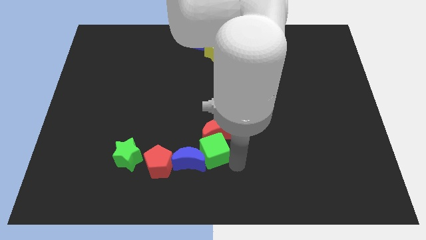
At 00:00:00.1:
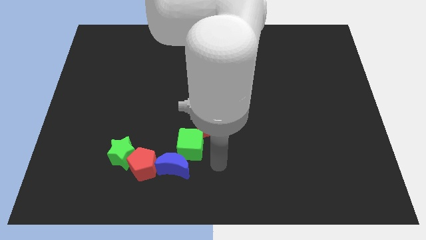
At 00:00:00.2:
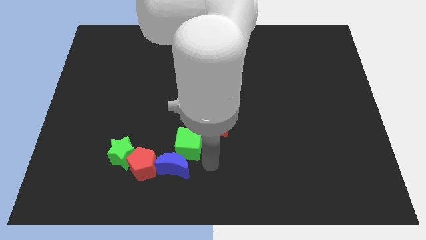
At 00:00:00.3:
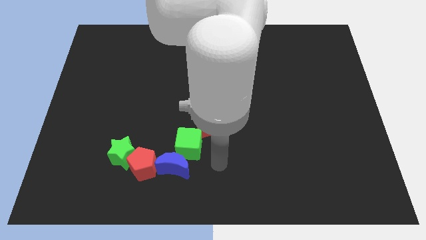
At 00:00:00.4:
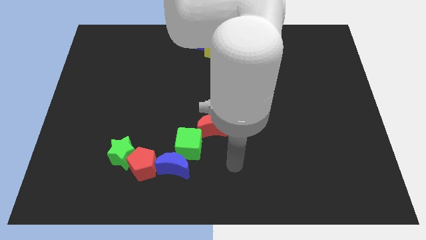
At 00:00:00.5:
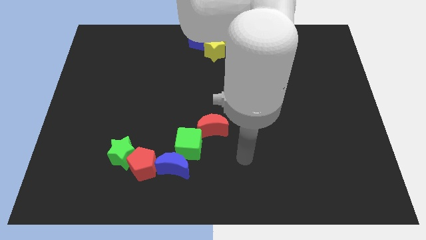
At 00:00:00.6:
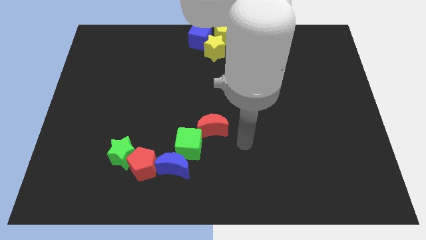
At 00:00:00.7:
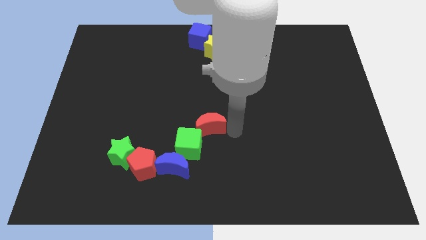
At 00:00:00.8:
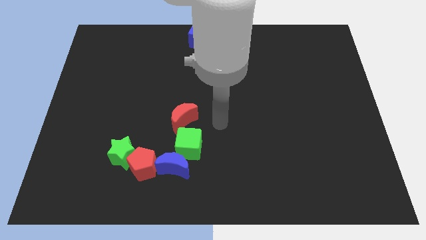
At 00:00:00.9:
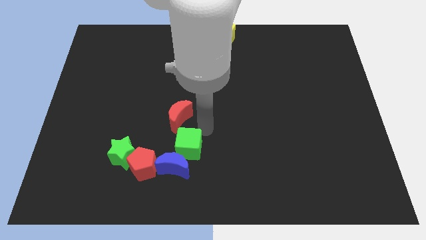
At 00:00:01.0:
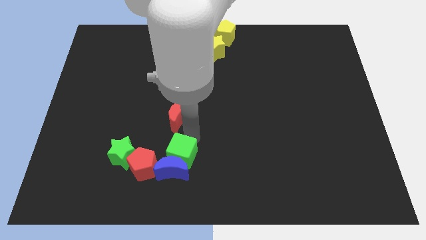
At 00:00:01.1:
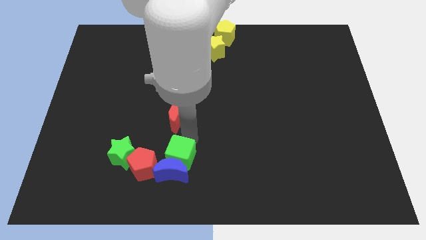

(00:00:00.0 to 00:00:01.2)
place green cube and red moon above the blue crescent

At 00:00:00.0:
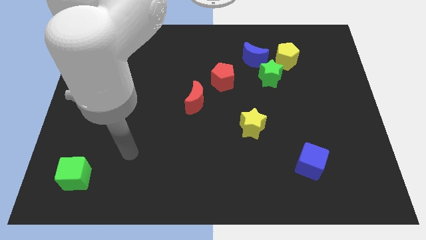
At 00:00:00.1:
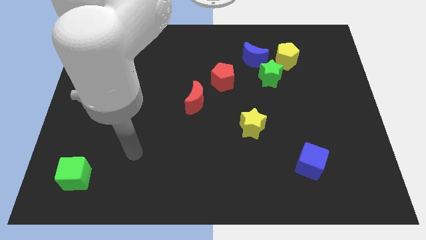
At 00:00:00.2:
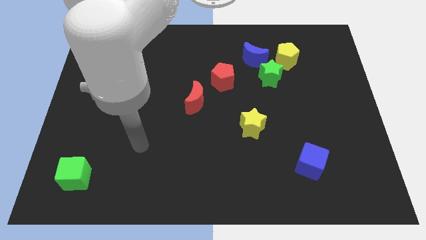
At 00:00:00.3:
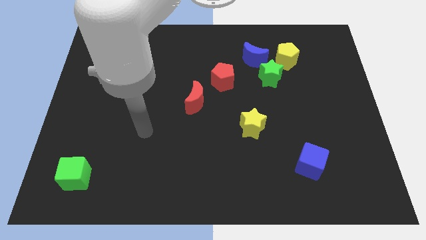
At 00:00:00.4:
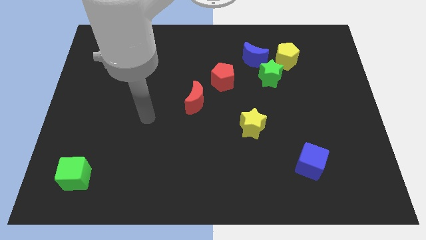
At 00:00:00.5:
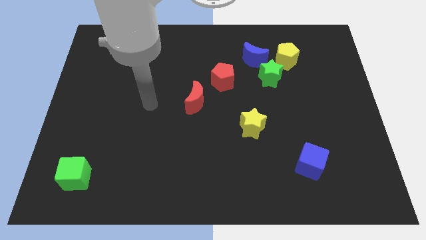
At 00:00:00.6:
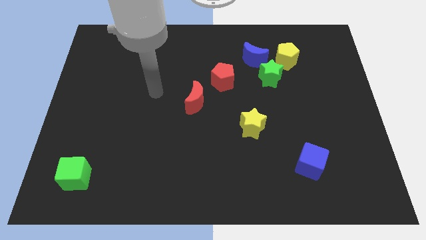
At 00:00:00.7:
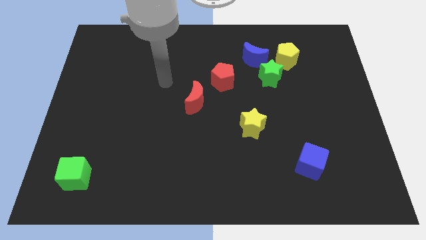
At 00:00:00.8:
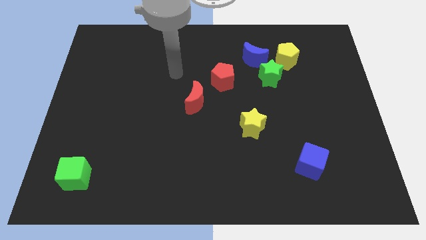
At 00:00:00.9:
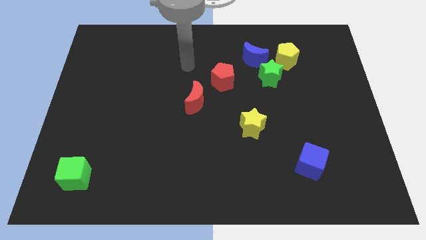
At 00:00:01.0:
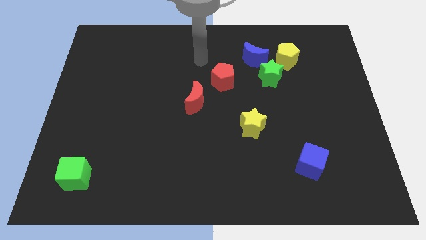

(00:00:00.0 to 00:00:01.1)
place your arm top of the red moon

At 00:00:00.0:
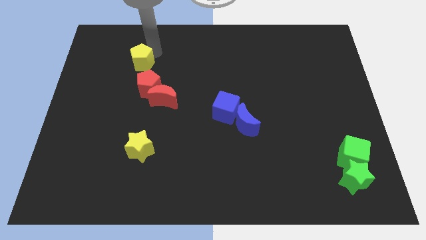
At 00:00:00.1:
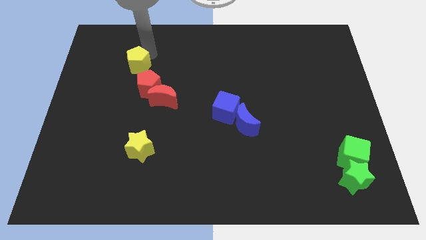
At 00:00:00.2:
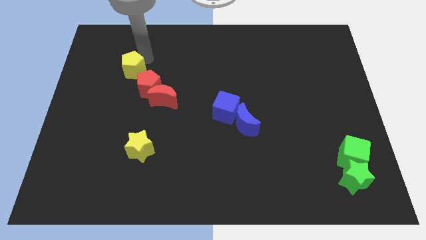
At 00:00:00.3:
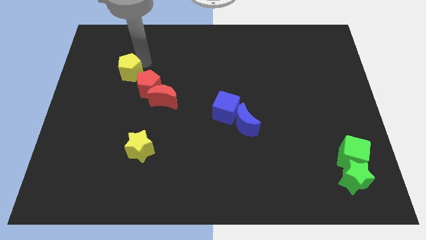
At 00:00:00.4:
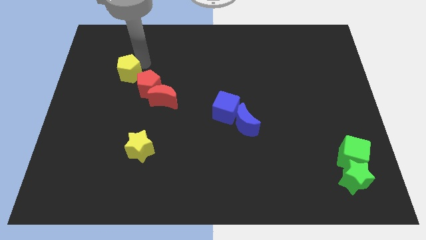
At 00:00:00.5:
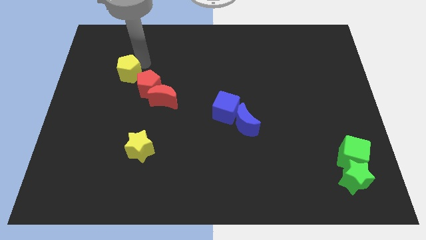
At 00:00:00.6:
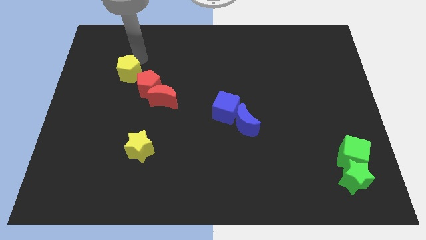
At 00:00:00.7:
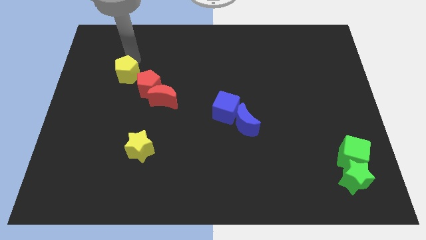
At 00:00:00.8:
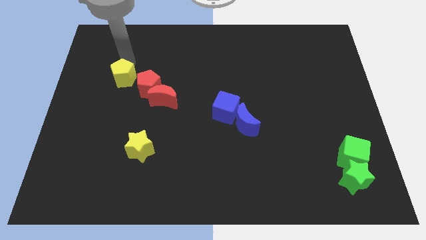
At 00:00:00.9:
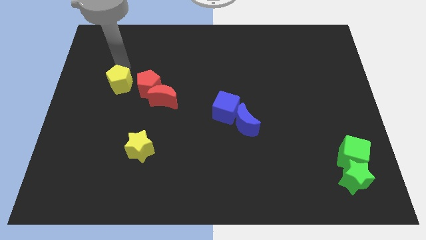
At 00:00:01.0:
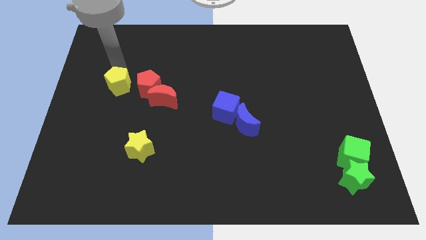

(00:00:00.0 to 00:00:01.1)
move the yellow pentagon to the left of the red pentagon

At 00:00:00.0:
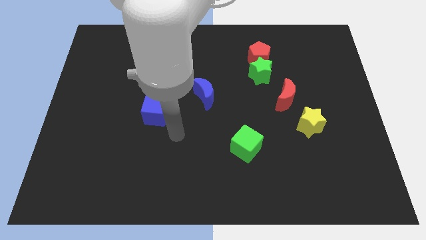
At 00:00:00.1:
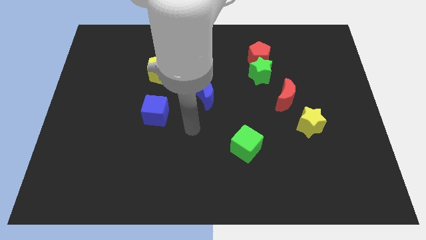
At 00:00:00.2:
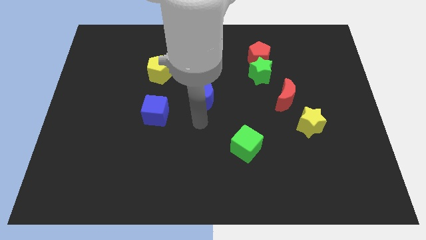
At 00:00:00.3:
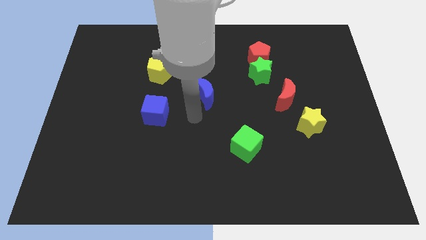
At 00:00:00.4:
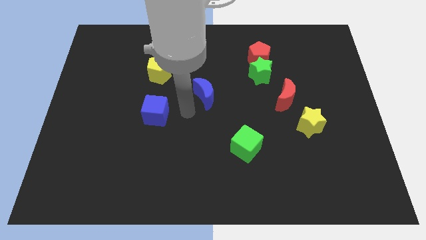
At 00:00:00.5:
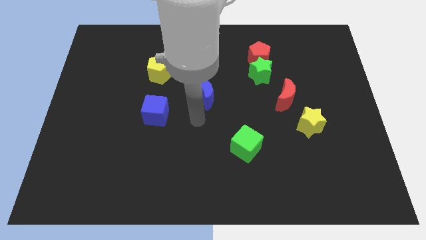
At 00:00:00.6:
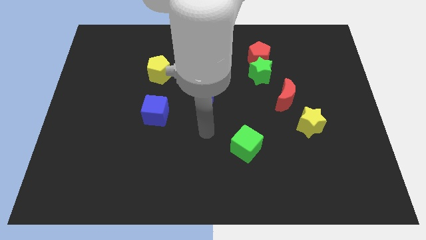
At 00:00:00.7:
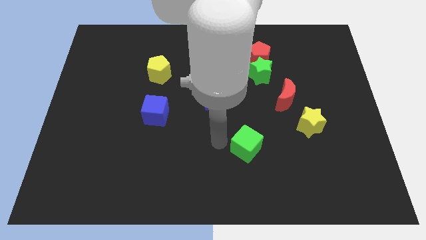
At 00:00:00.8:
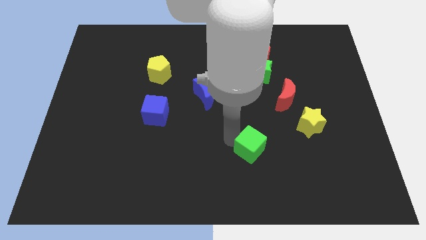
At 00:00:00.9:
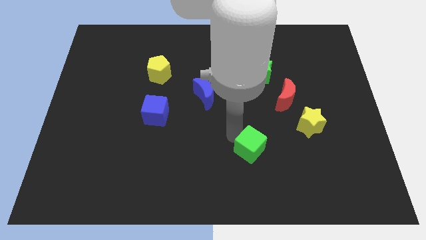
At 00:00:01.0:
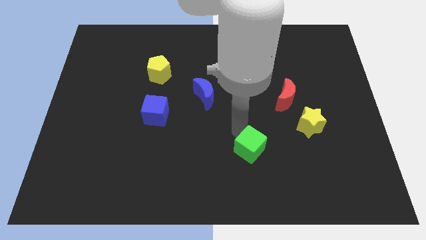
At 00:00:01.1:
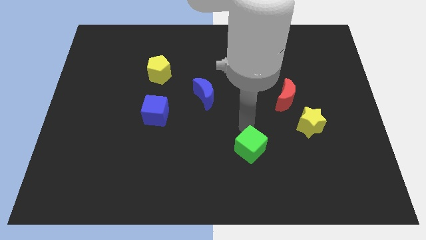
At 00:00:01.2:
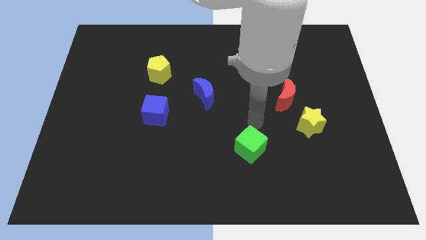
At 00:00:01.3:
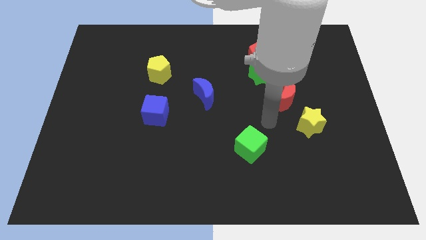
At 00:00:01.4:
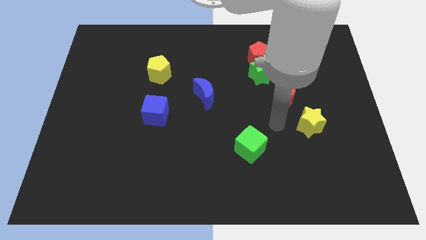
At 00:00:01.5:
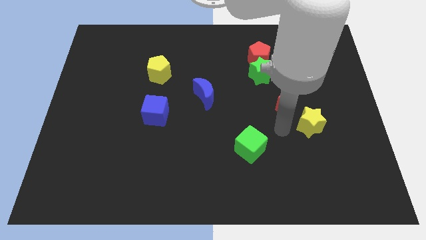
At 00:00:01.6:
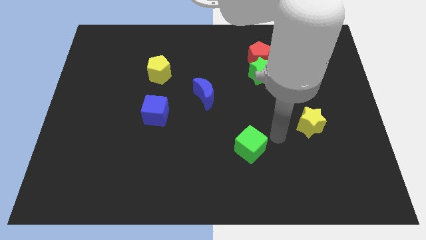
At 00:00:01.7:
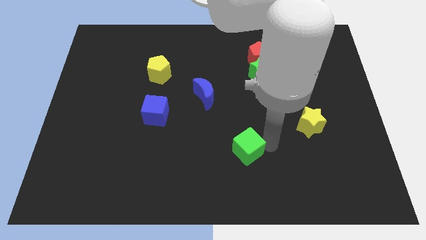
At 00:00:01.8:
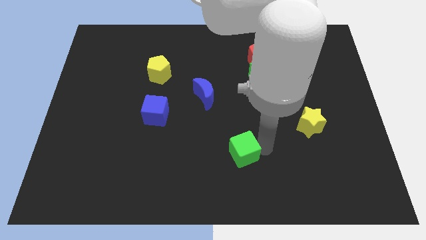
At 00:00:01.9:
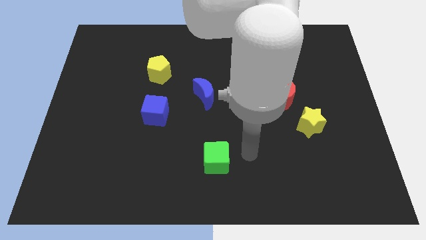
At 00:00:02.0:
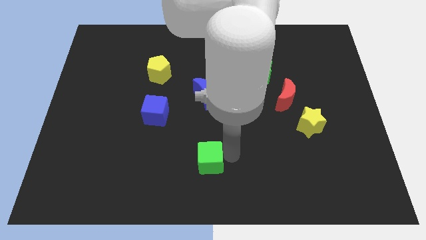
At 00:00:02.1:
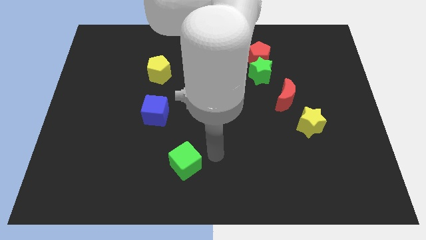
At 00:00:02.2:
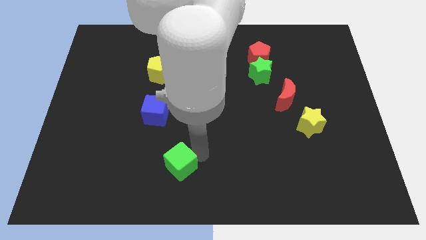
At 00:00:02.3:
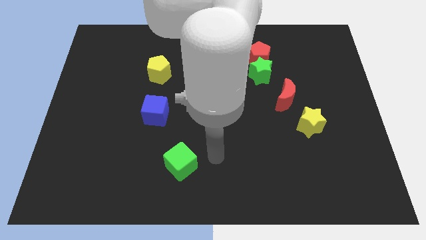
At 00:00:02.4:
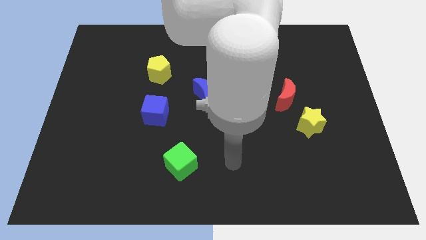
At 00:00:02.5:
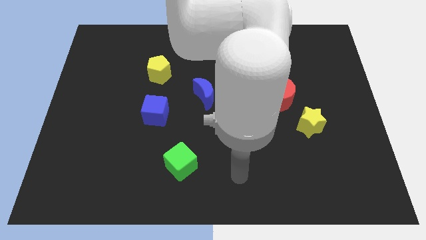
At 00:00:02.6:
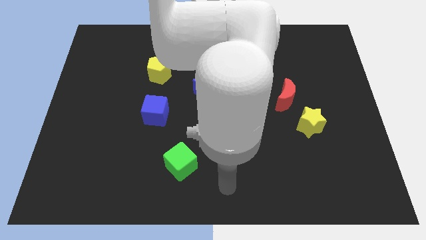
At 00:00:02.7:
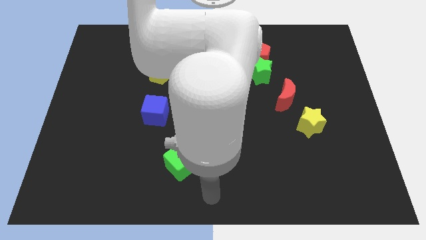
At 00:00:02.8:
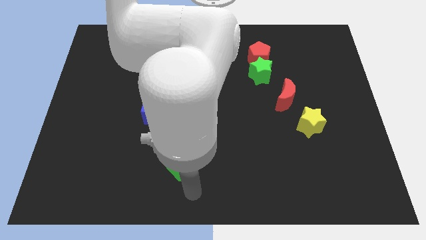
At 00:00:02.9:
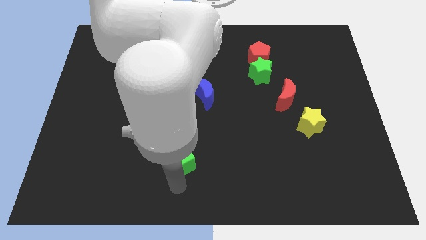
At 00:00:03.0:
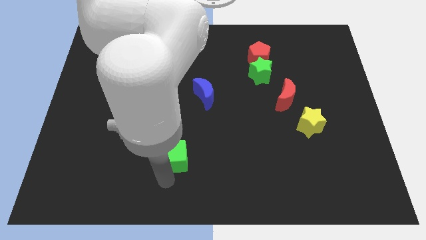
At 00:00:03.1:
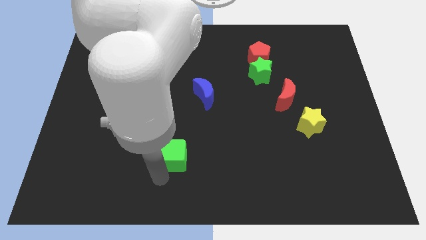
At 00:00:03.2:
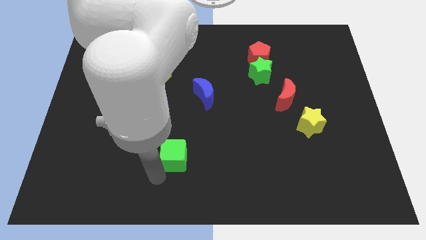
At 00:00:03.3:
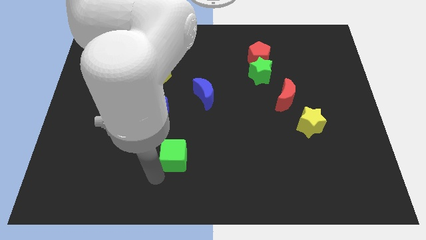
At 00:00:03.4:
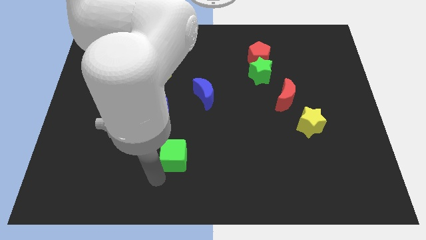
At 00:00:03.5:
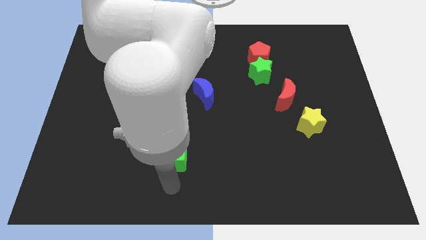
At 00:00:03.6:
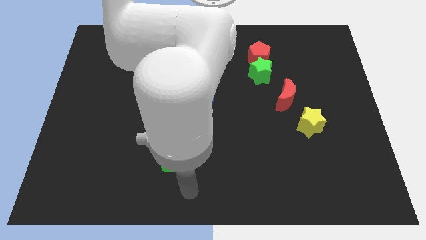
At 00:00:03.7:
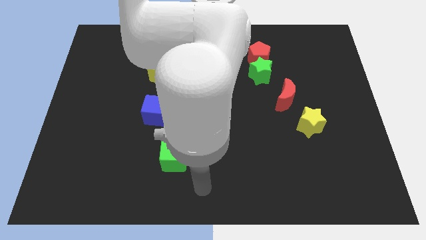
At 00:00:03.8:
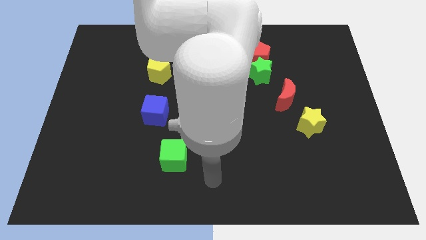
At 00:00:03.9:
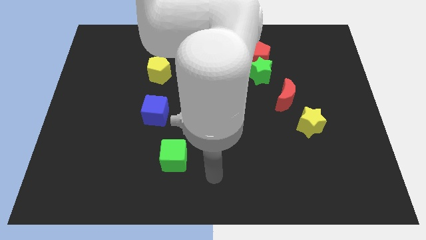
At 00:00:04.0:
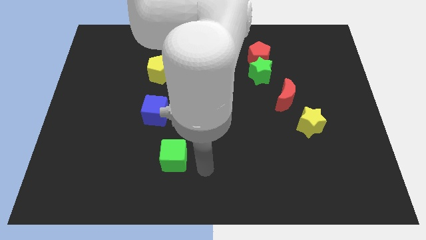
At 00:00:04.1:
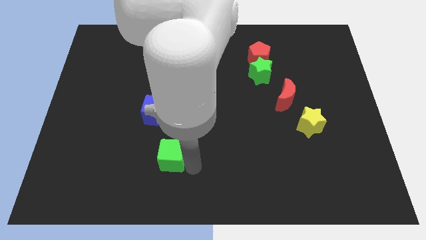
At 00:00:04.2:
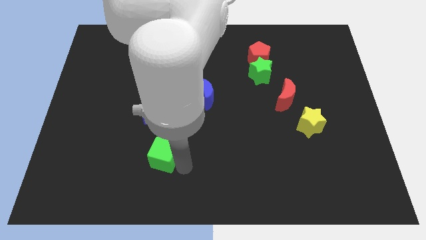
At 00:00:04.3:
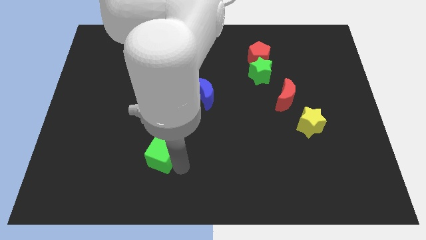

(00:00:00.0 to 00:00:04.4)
slightly move the green cube to the bottom of the blue cube

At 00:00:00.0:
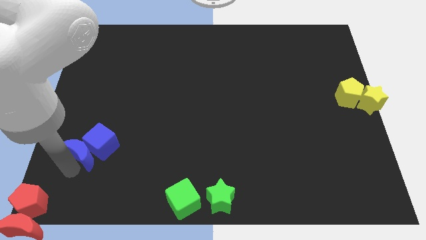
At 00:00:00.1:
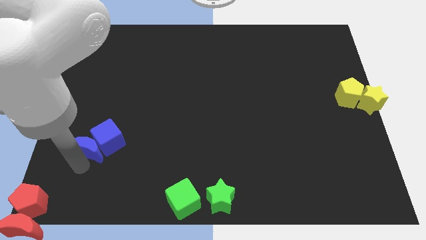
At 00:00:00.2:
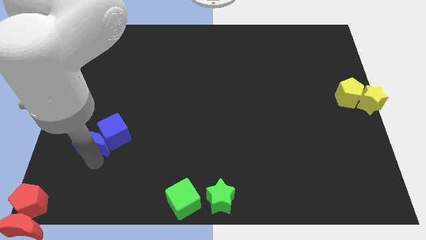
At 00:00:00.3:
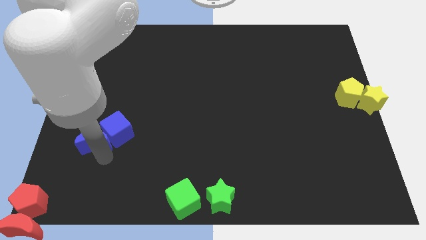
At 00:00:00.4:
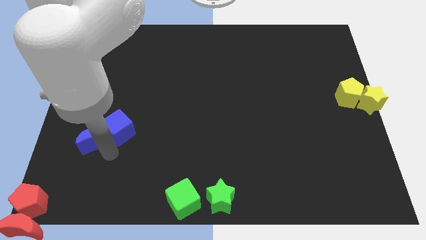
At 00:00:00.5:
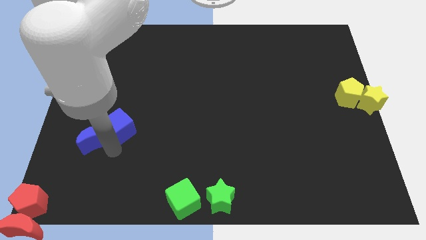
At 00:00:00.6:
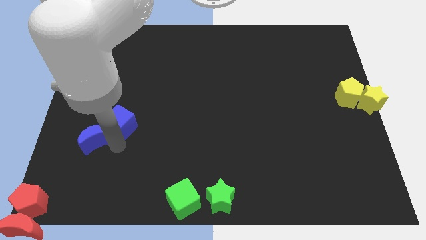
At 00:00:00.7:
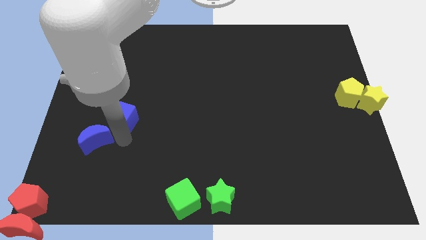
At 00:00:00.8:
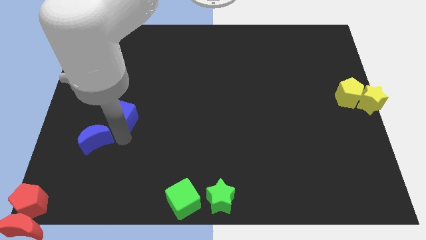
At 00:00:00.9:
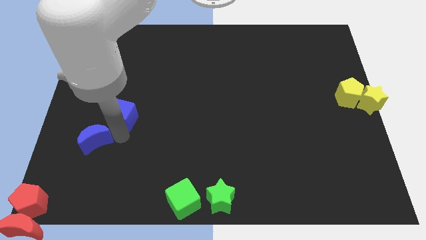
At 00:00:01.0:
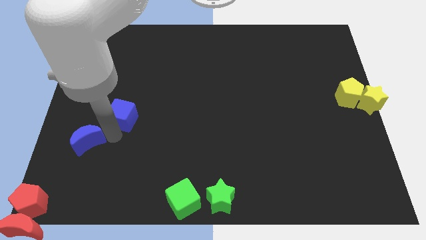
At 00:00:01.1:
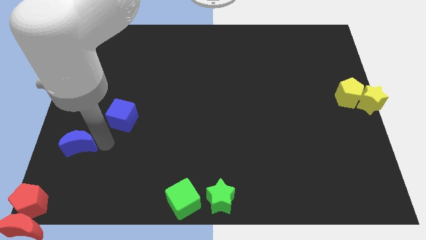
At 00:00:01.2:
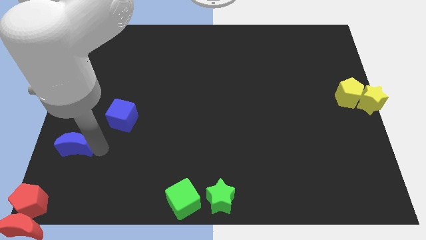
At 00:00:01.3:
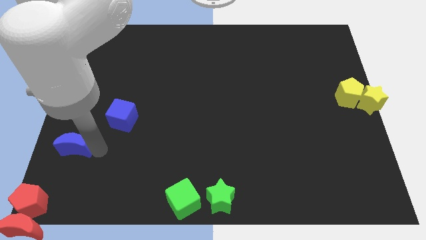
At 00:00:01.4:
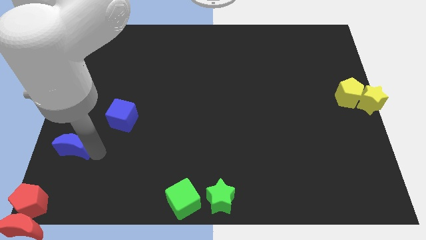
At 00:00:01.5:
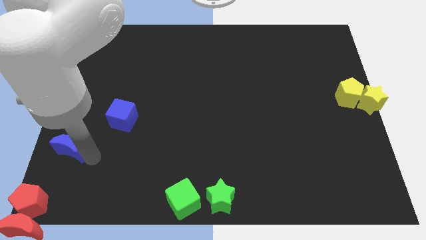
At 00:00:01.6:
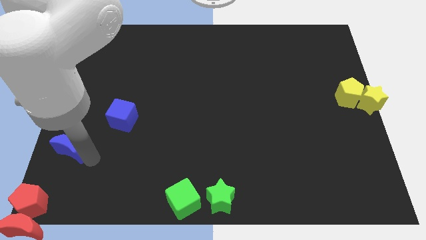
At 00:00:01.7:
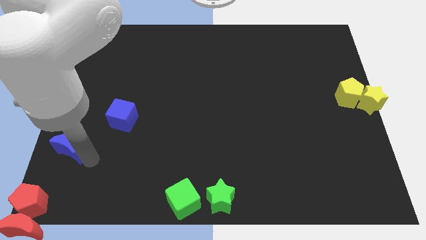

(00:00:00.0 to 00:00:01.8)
separate the blue moon from the blue cube
